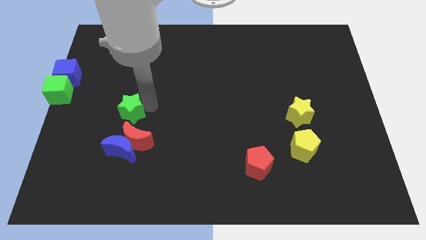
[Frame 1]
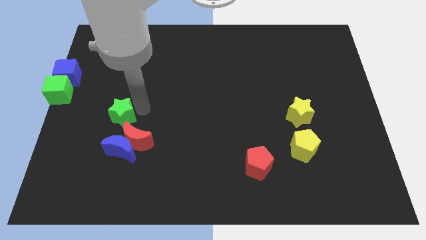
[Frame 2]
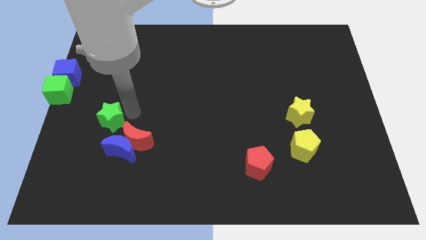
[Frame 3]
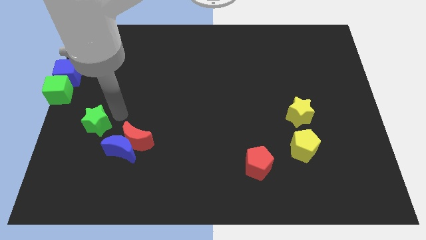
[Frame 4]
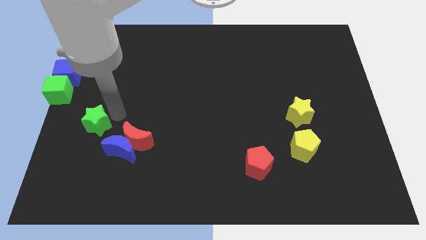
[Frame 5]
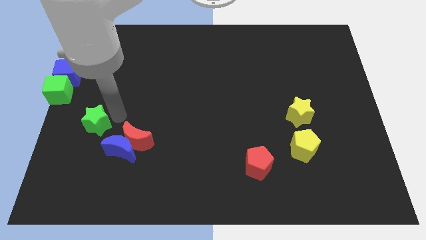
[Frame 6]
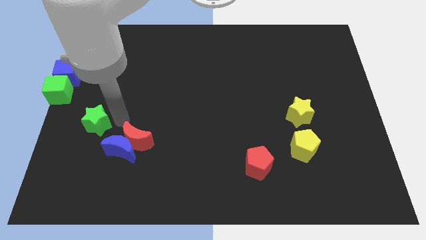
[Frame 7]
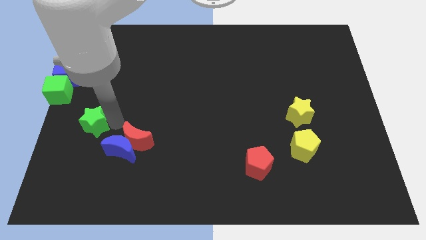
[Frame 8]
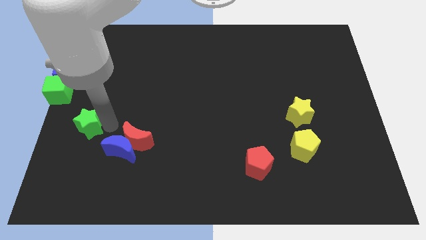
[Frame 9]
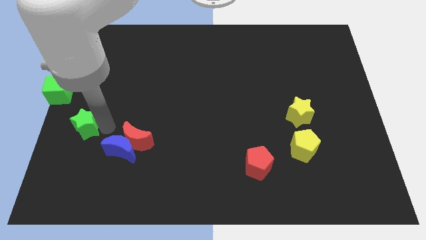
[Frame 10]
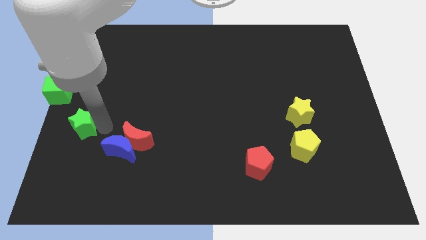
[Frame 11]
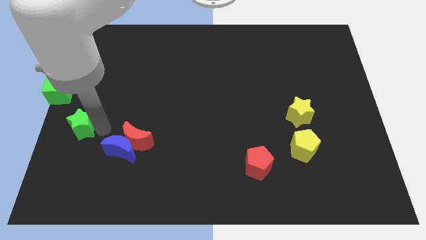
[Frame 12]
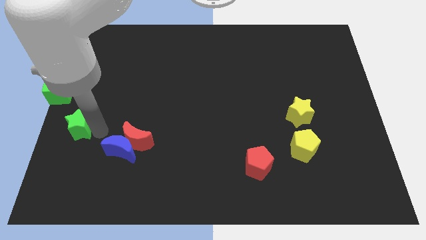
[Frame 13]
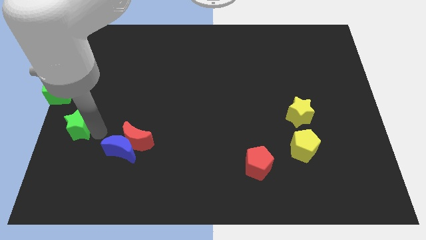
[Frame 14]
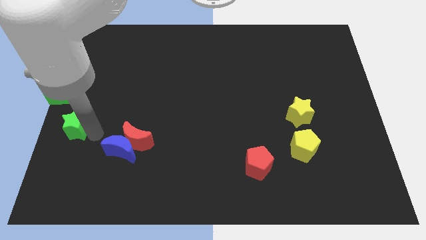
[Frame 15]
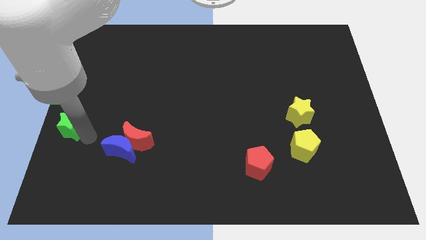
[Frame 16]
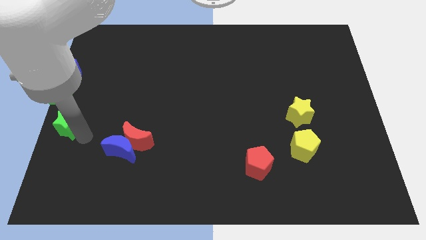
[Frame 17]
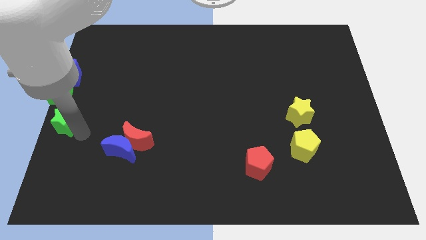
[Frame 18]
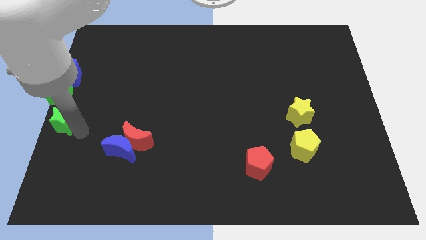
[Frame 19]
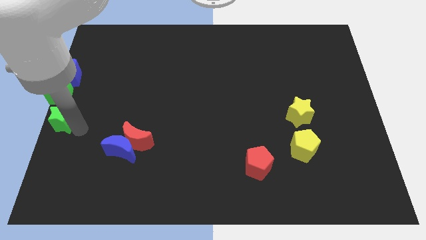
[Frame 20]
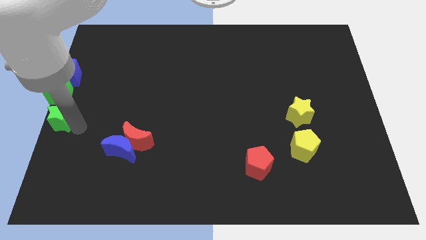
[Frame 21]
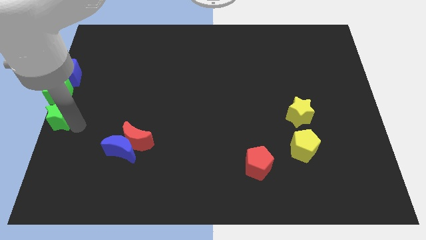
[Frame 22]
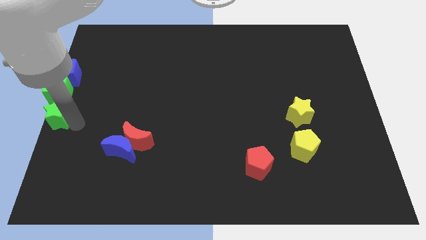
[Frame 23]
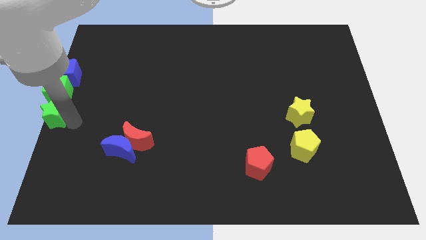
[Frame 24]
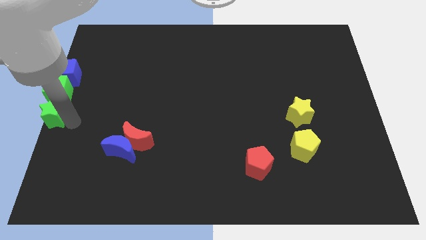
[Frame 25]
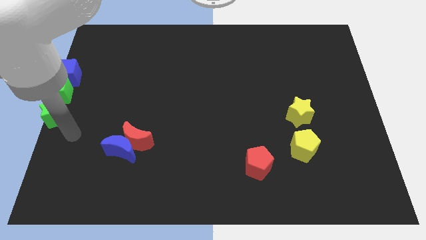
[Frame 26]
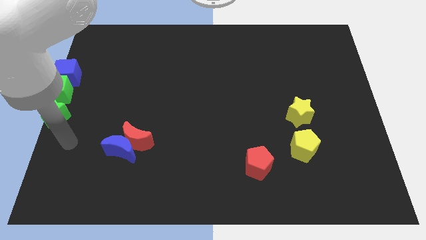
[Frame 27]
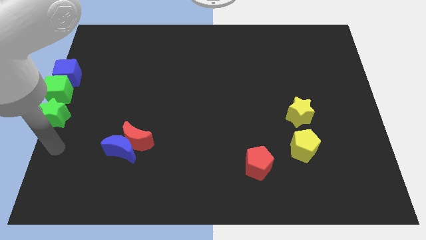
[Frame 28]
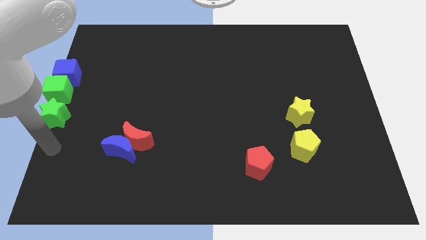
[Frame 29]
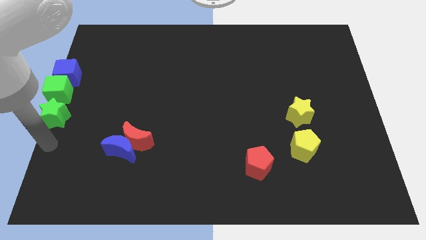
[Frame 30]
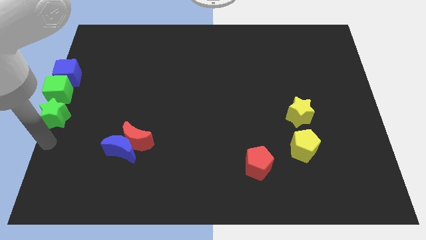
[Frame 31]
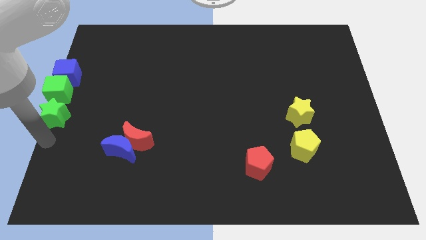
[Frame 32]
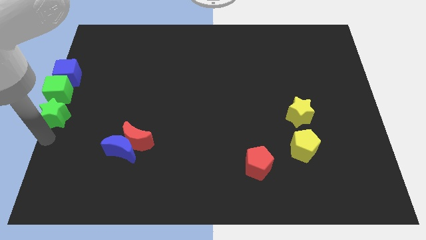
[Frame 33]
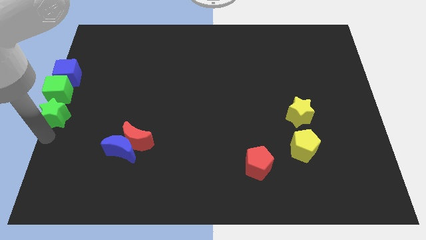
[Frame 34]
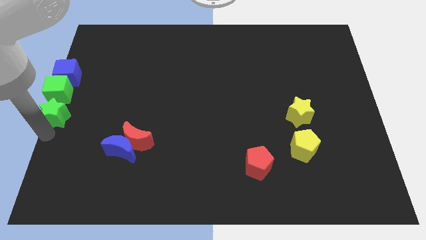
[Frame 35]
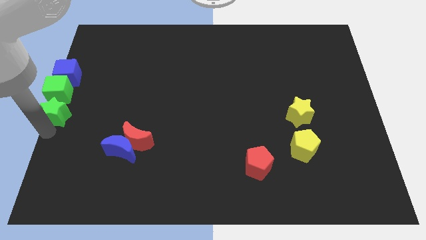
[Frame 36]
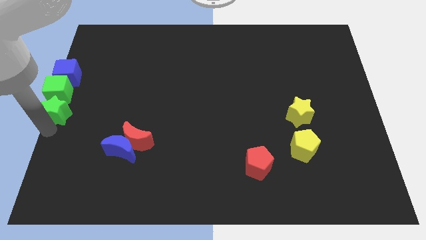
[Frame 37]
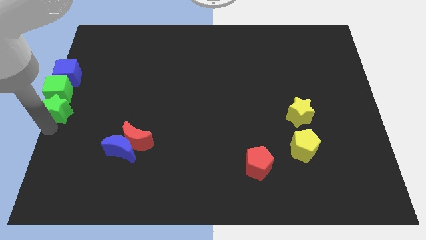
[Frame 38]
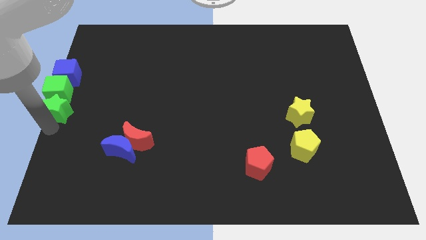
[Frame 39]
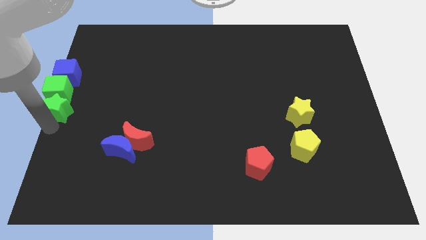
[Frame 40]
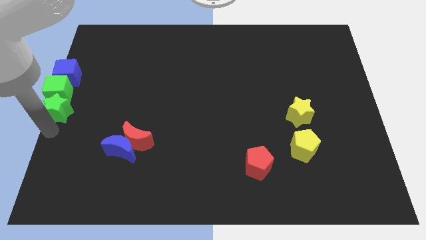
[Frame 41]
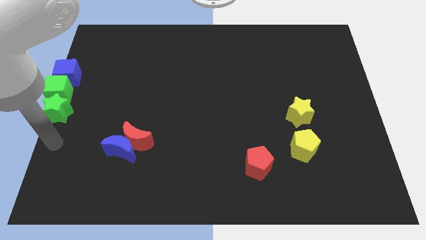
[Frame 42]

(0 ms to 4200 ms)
place the green star below into the green cube

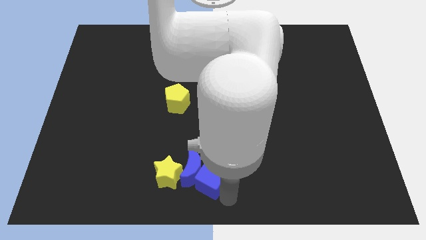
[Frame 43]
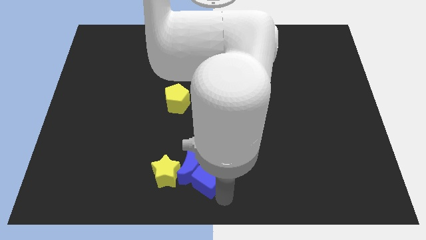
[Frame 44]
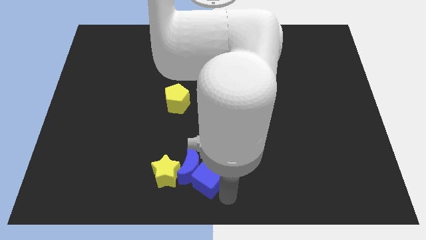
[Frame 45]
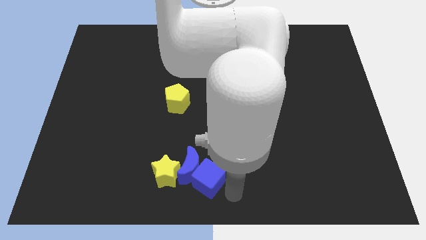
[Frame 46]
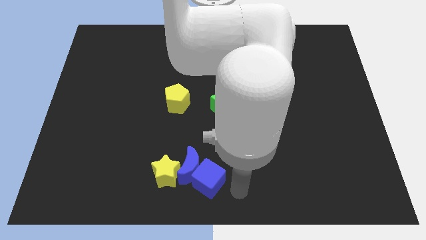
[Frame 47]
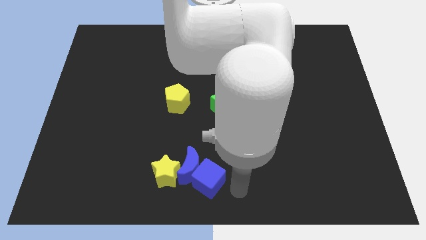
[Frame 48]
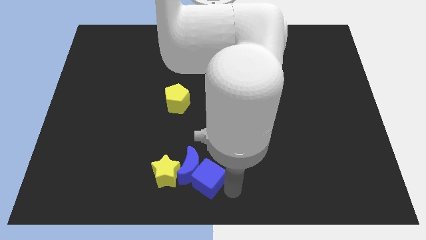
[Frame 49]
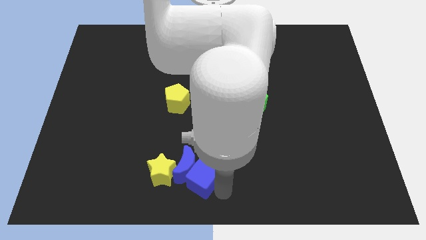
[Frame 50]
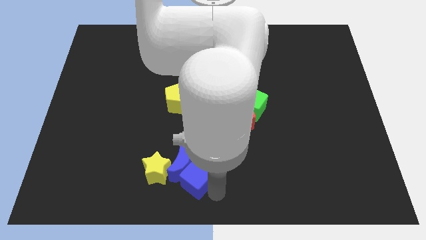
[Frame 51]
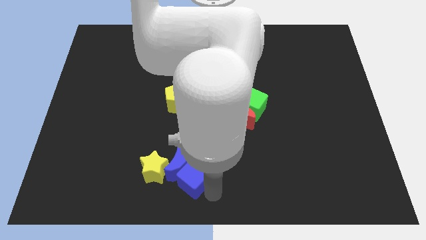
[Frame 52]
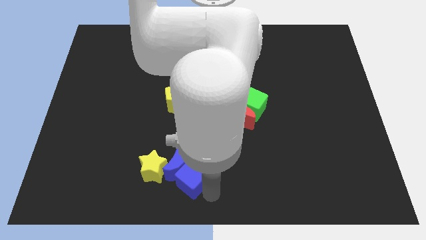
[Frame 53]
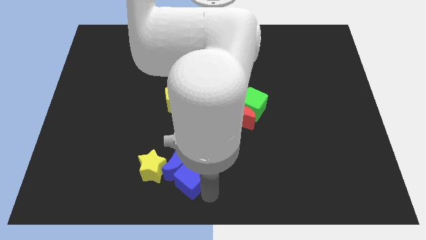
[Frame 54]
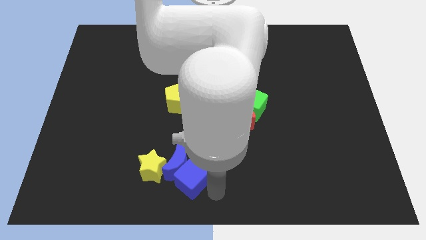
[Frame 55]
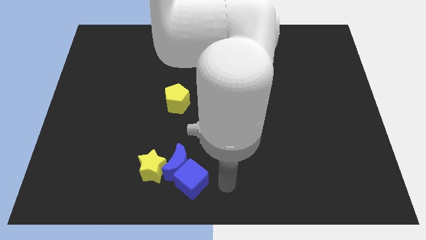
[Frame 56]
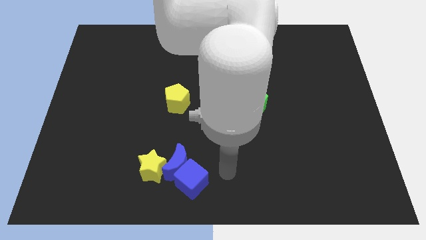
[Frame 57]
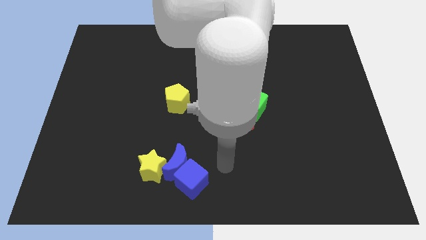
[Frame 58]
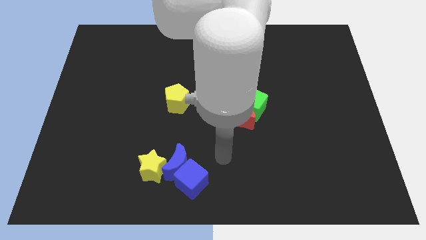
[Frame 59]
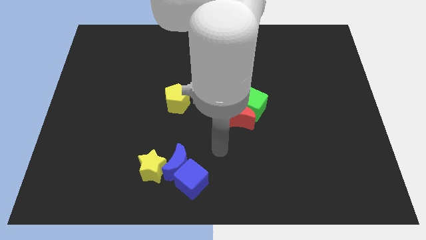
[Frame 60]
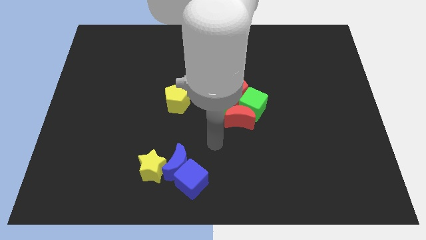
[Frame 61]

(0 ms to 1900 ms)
push blue cube and blue moon into yellow star

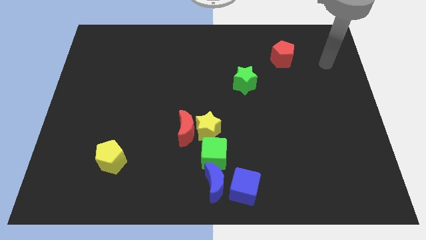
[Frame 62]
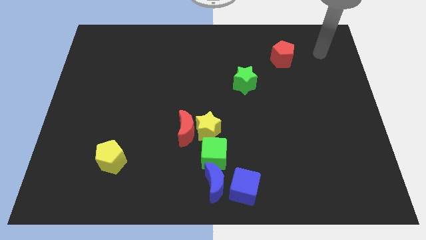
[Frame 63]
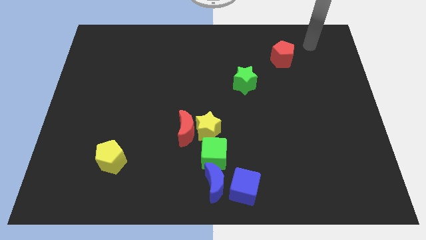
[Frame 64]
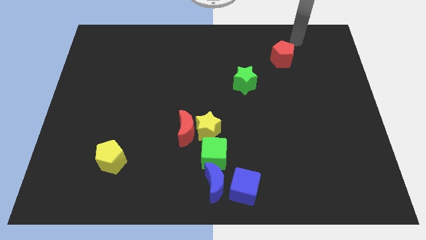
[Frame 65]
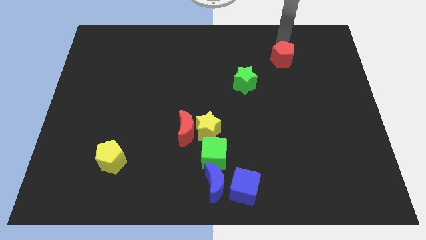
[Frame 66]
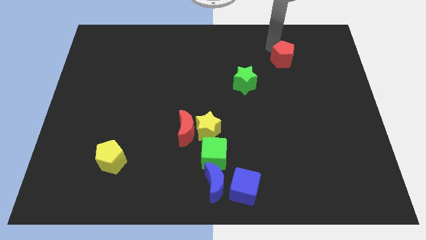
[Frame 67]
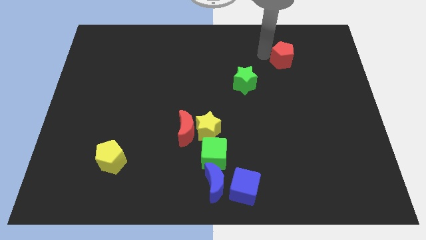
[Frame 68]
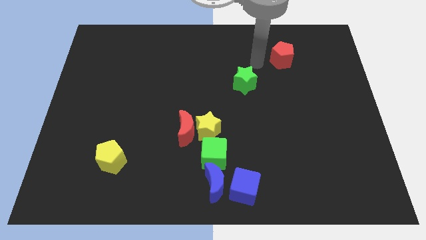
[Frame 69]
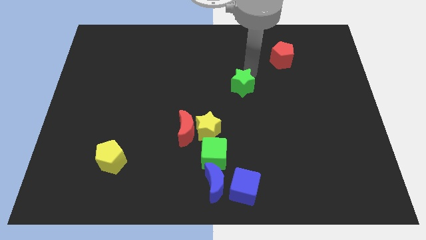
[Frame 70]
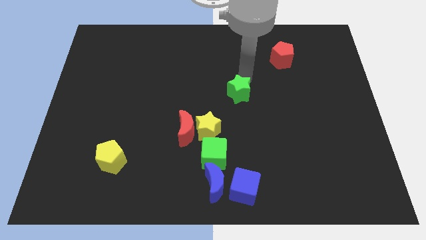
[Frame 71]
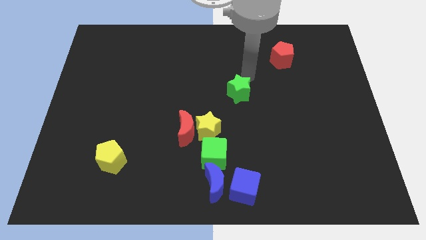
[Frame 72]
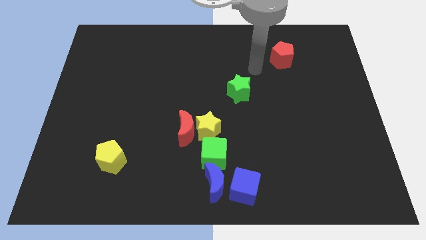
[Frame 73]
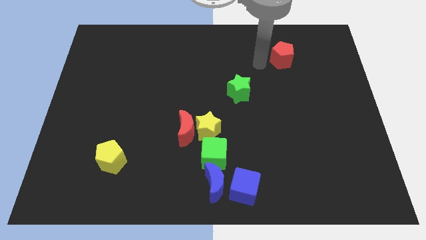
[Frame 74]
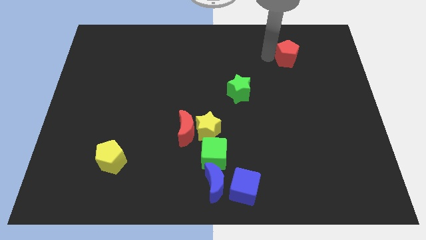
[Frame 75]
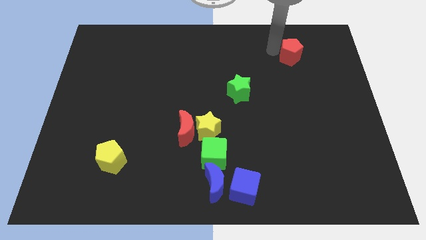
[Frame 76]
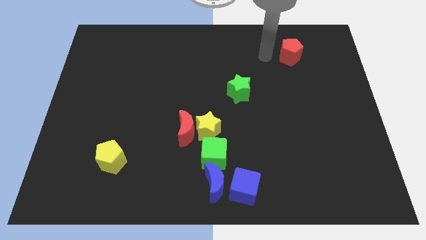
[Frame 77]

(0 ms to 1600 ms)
move the green star slightly towards the yellow star

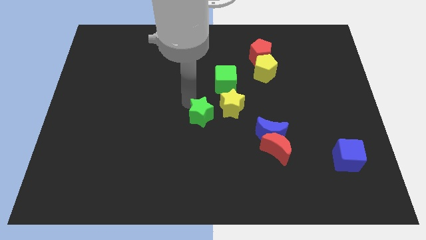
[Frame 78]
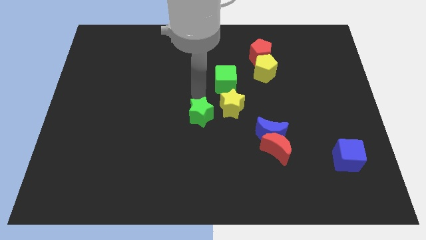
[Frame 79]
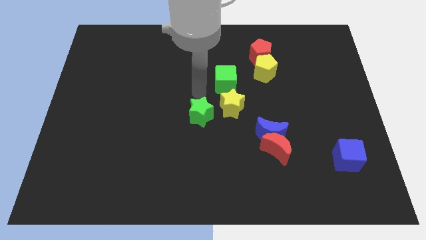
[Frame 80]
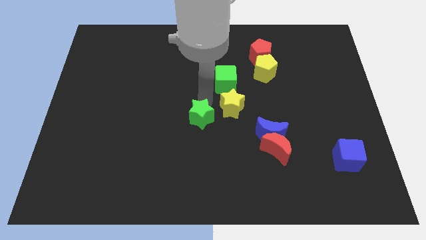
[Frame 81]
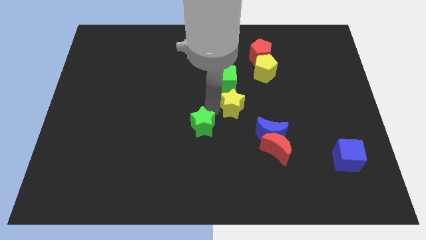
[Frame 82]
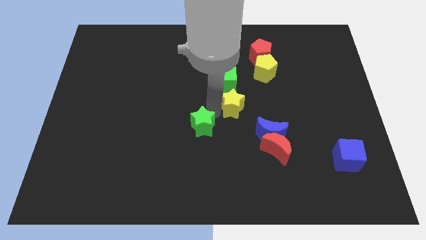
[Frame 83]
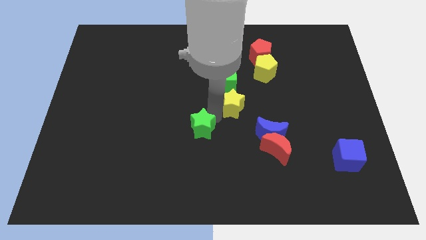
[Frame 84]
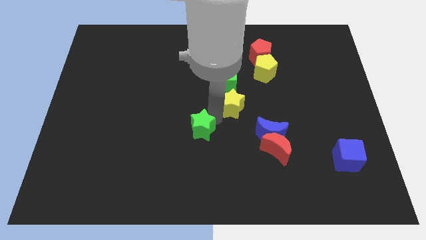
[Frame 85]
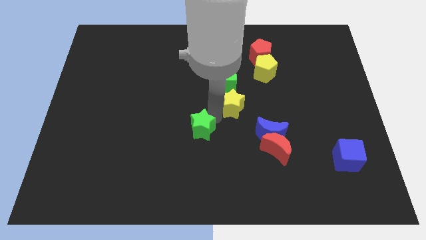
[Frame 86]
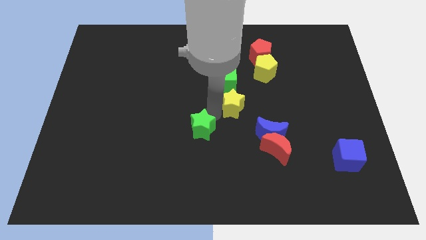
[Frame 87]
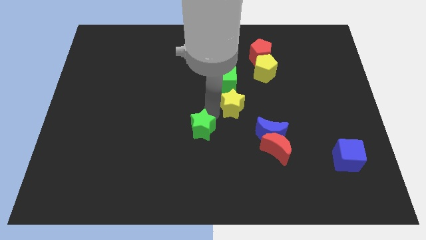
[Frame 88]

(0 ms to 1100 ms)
put the green star at the bottom left of the yellow star

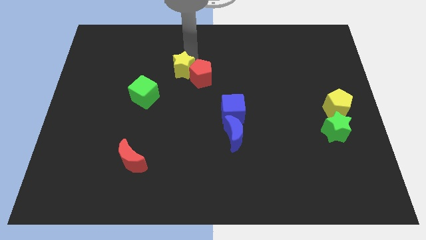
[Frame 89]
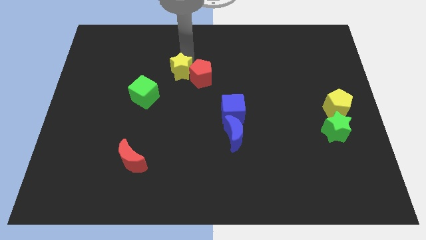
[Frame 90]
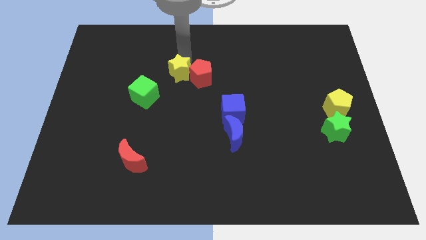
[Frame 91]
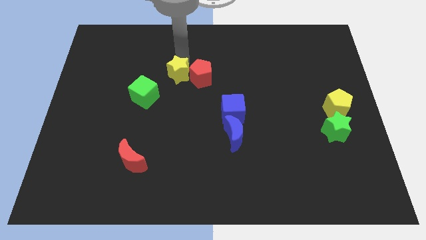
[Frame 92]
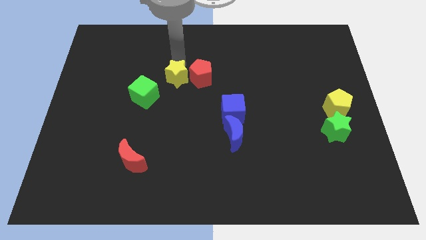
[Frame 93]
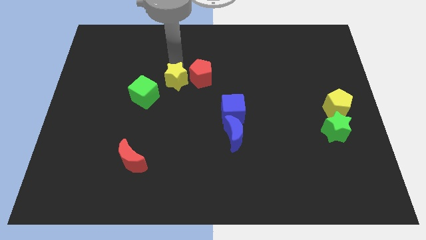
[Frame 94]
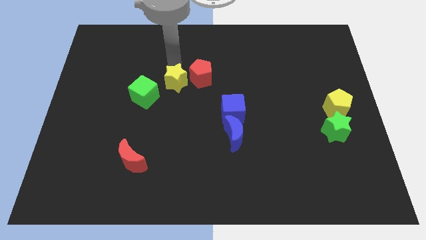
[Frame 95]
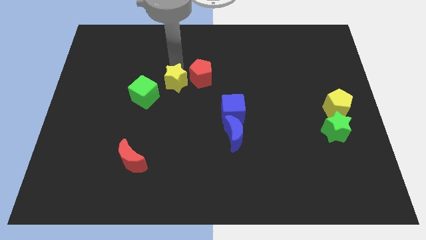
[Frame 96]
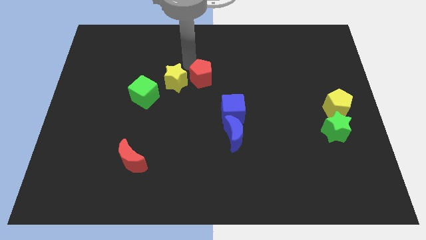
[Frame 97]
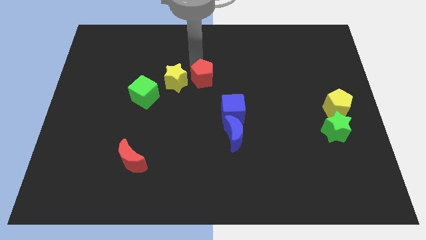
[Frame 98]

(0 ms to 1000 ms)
push the yellow star towards the green cube
